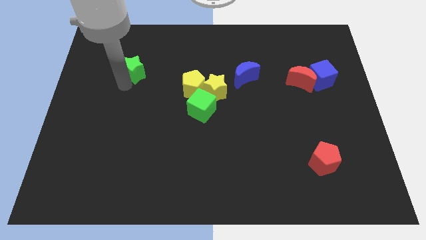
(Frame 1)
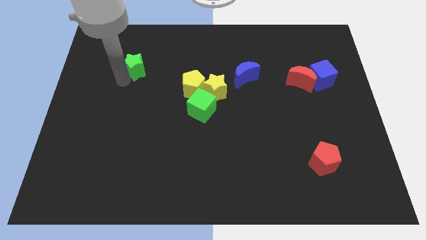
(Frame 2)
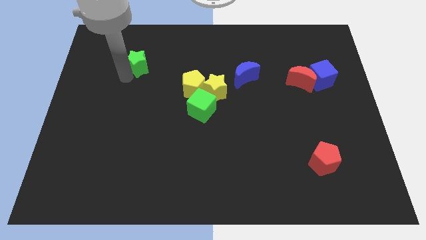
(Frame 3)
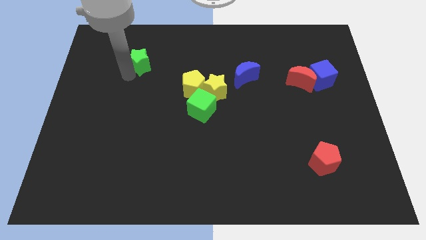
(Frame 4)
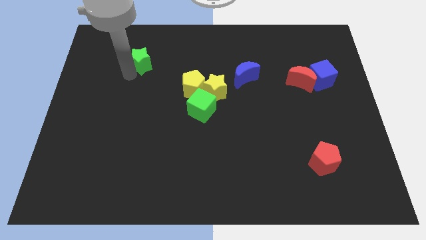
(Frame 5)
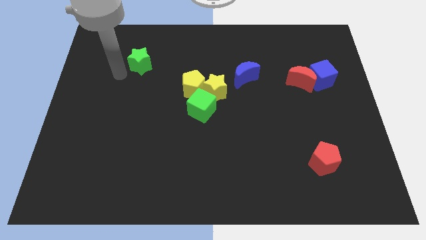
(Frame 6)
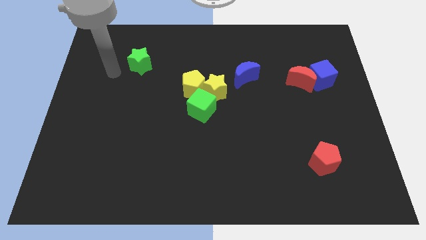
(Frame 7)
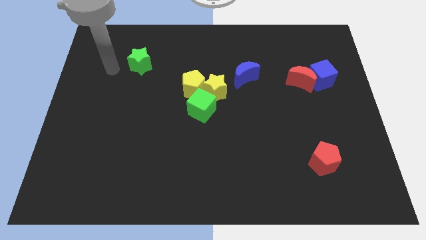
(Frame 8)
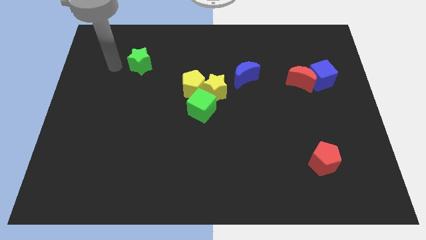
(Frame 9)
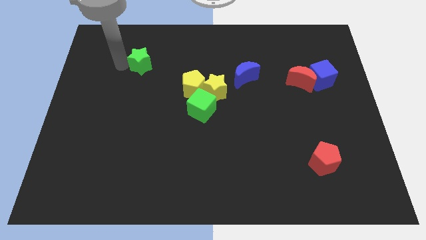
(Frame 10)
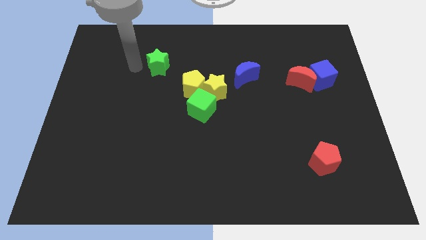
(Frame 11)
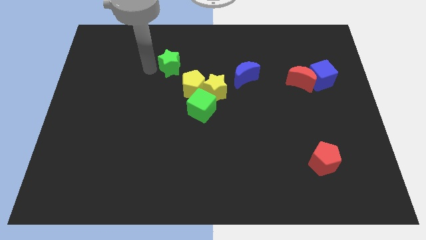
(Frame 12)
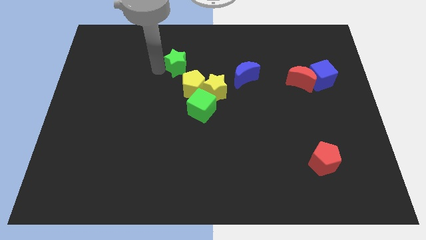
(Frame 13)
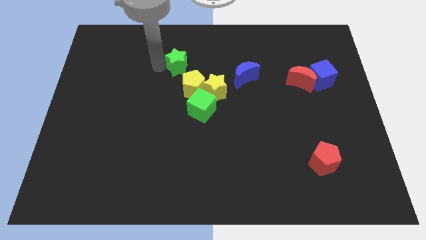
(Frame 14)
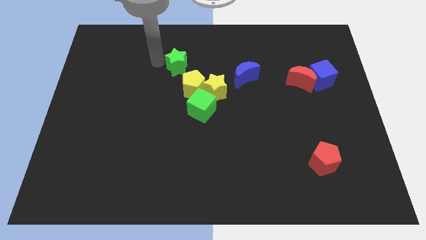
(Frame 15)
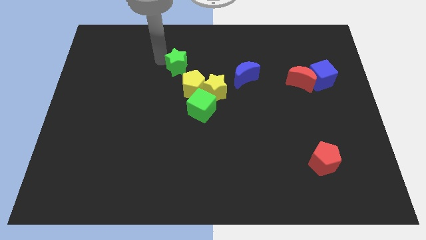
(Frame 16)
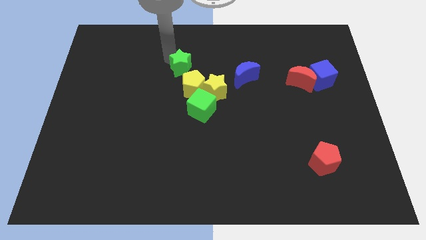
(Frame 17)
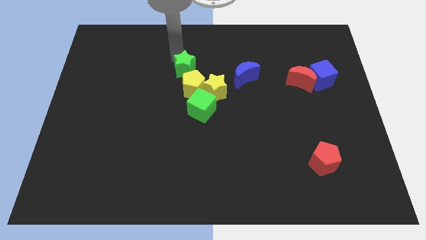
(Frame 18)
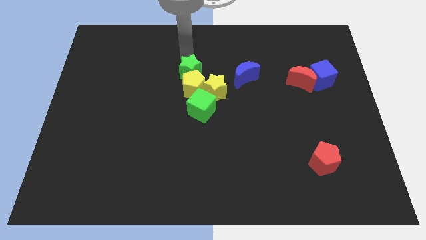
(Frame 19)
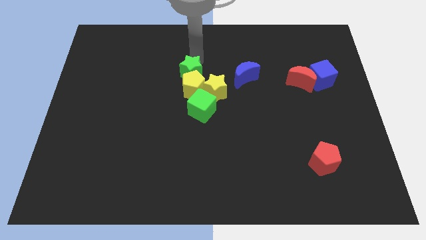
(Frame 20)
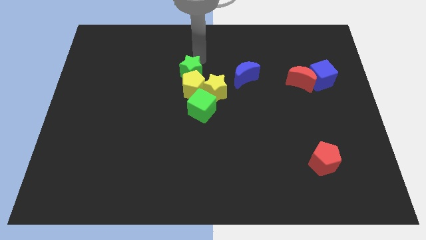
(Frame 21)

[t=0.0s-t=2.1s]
push the green star into the top side of the yellow pentagon

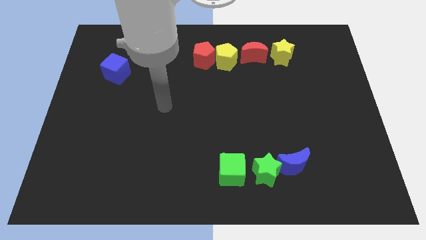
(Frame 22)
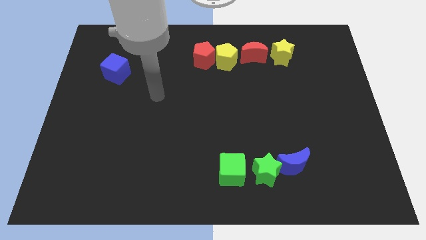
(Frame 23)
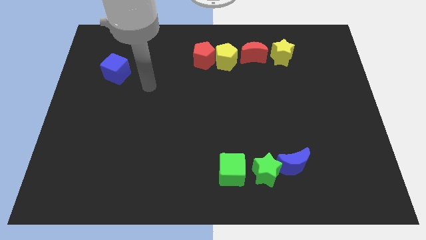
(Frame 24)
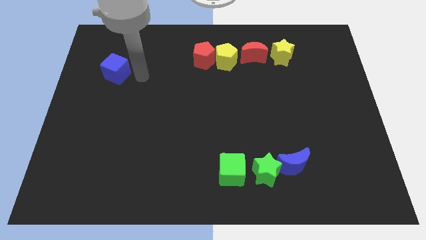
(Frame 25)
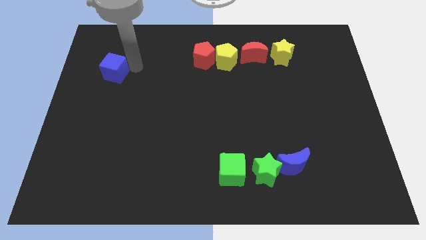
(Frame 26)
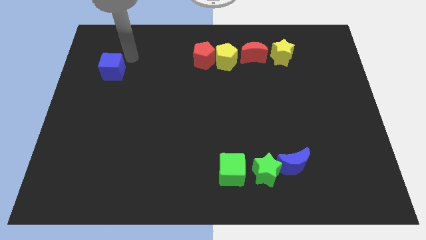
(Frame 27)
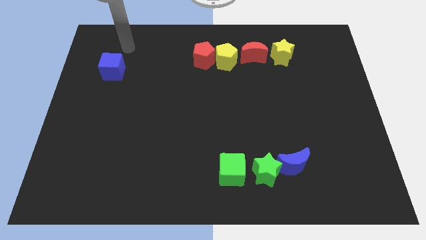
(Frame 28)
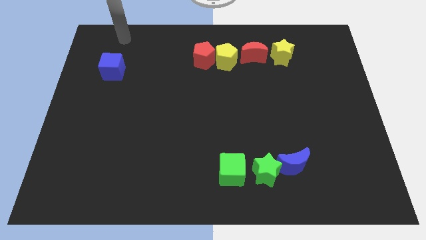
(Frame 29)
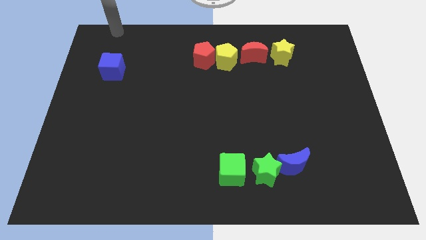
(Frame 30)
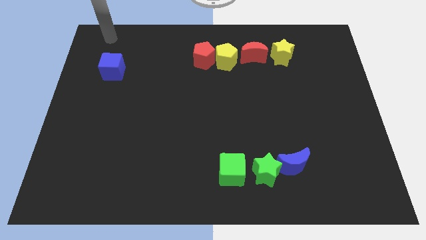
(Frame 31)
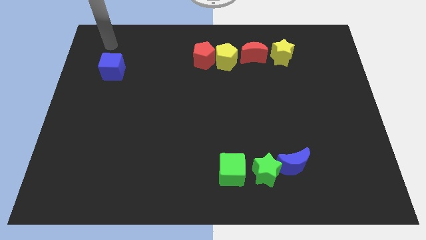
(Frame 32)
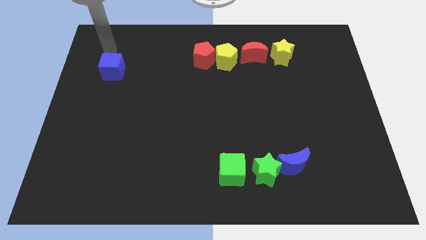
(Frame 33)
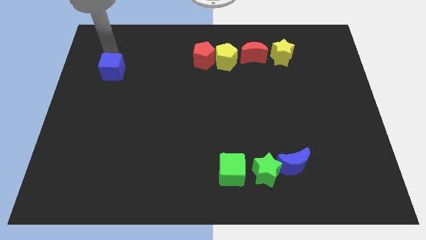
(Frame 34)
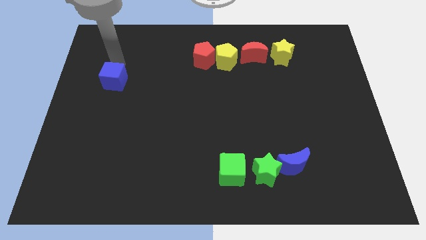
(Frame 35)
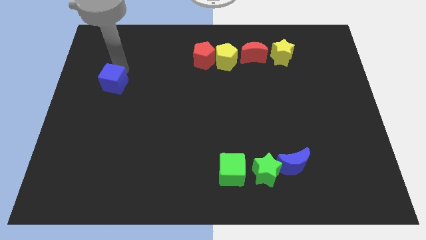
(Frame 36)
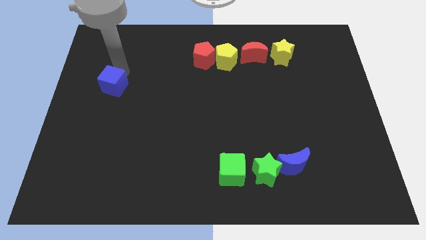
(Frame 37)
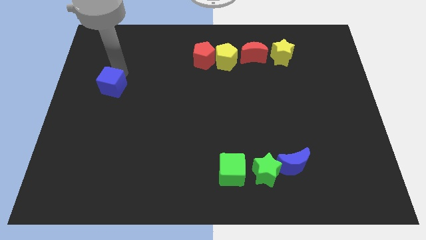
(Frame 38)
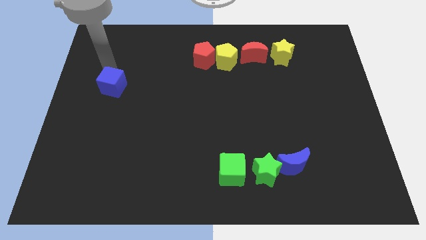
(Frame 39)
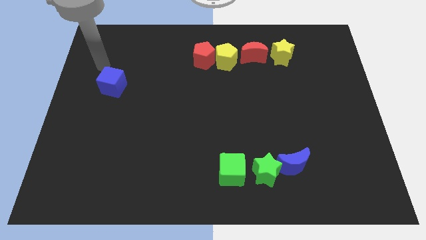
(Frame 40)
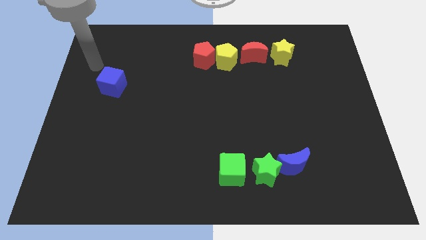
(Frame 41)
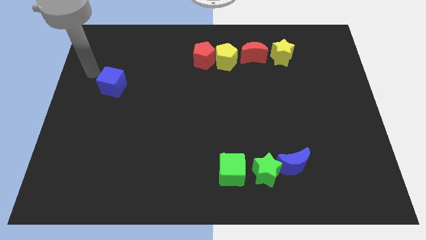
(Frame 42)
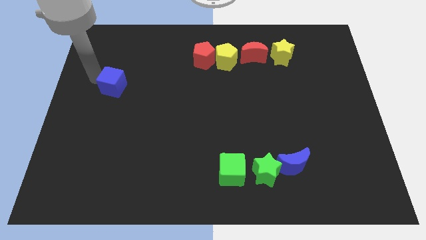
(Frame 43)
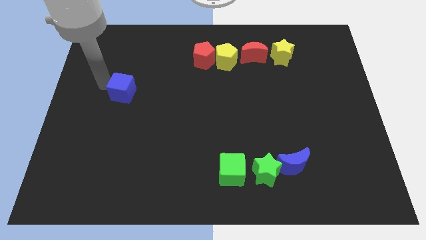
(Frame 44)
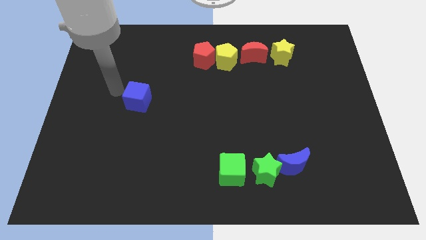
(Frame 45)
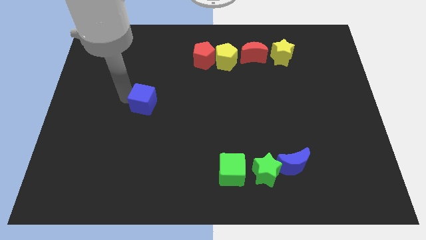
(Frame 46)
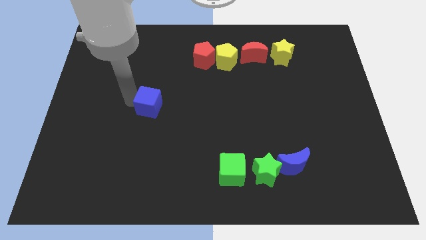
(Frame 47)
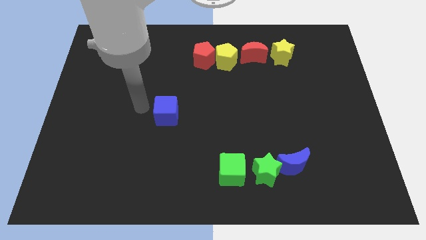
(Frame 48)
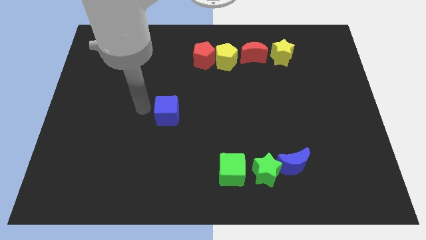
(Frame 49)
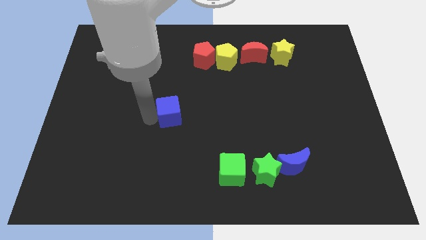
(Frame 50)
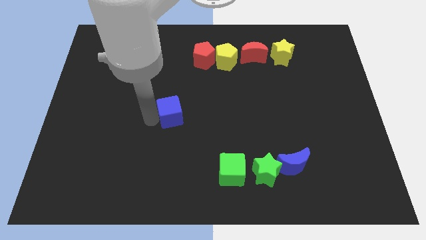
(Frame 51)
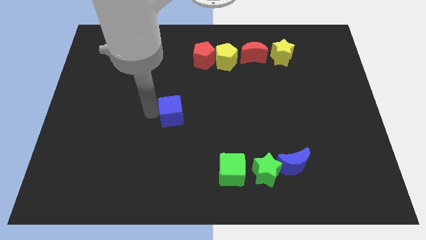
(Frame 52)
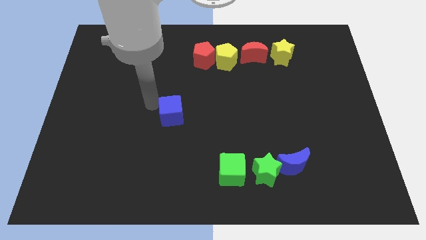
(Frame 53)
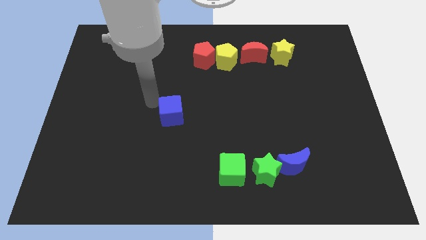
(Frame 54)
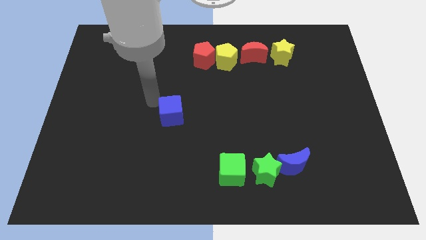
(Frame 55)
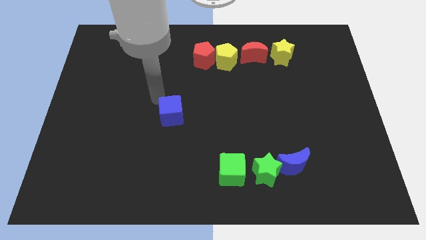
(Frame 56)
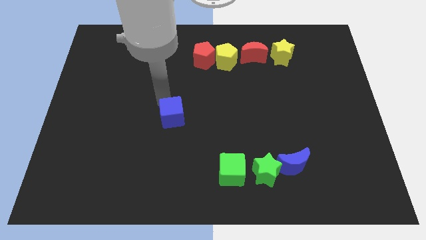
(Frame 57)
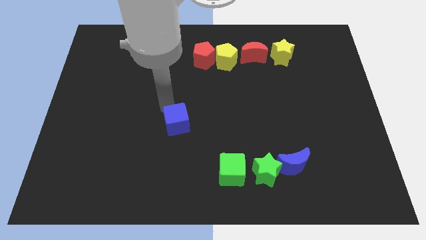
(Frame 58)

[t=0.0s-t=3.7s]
move the blue cube toward the bottom center

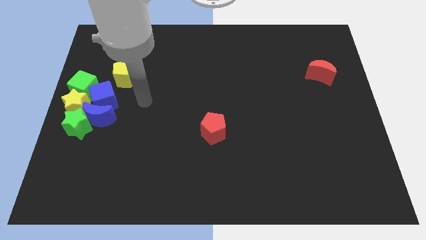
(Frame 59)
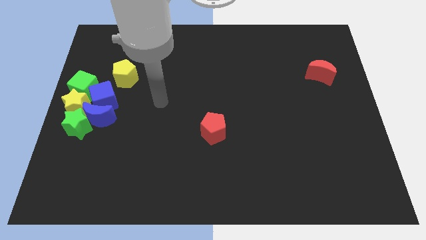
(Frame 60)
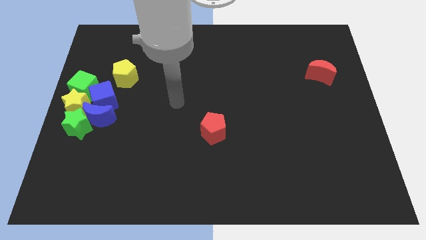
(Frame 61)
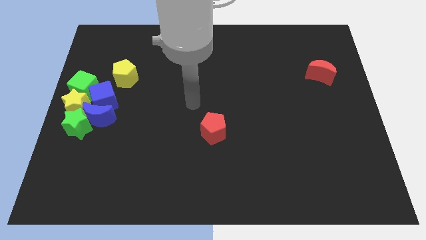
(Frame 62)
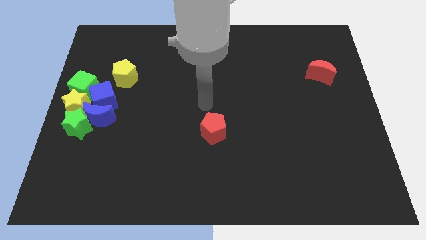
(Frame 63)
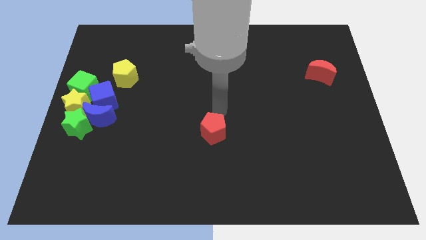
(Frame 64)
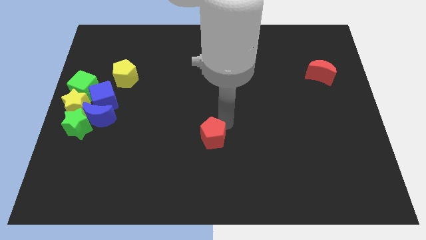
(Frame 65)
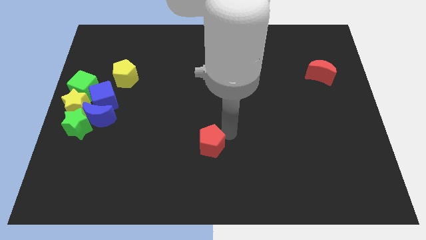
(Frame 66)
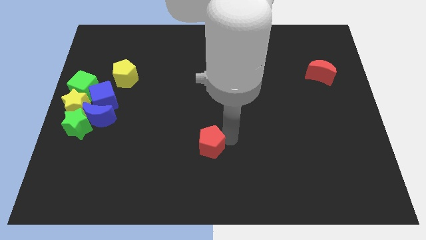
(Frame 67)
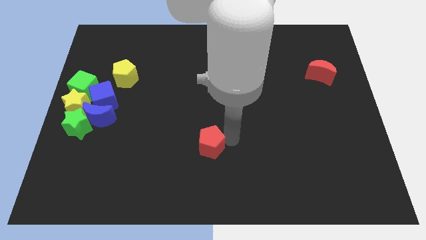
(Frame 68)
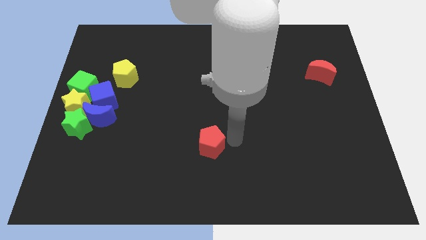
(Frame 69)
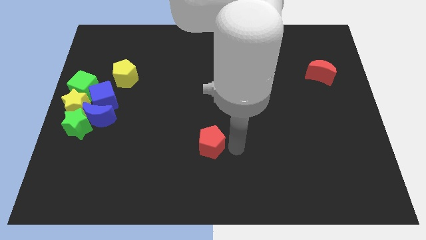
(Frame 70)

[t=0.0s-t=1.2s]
slightly move the red pentagon down

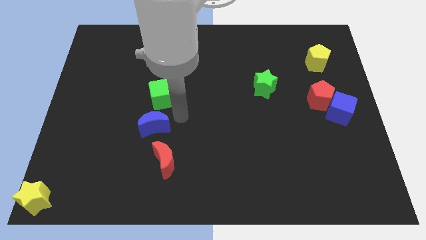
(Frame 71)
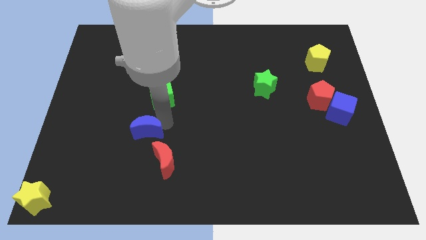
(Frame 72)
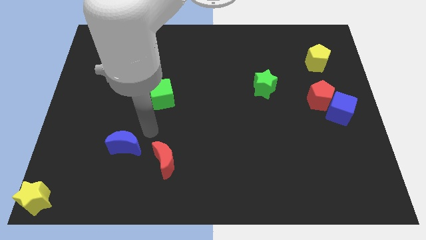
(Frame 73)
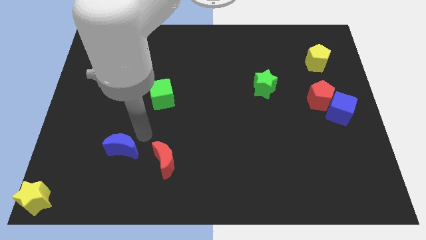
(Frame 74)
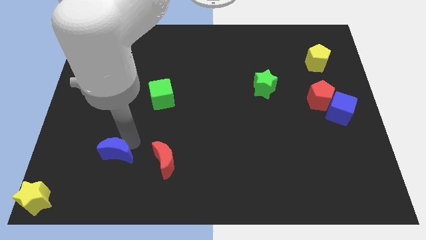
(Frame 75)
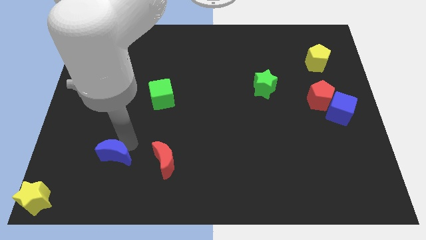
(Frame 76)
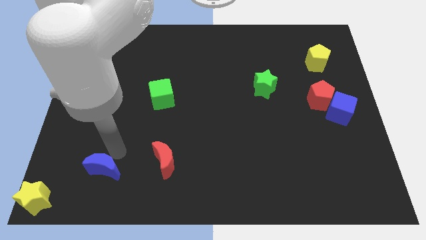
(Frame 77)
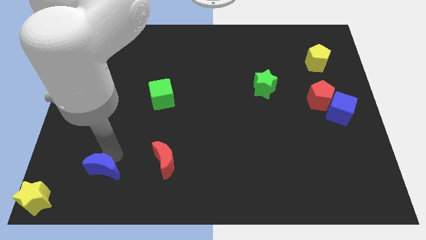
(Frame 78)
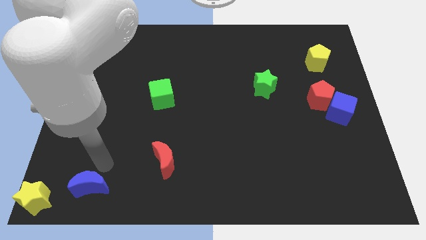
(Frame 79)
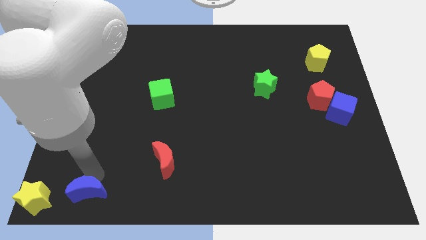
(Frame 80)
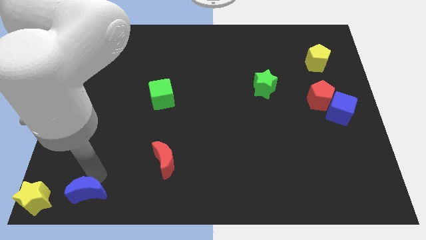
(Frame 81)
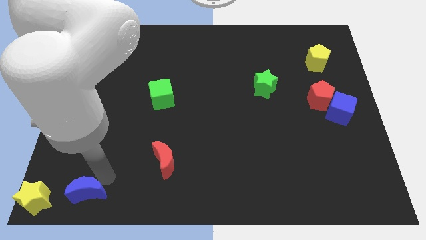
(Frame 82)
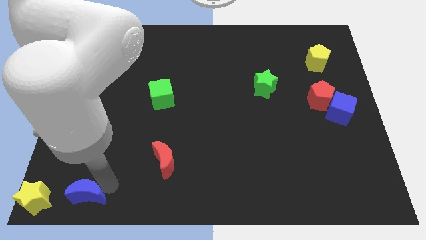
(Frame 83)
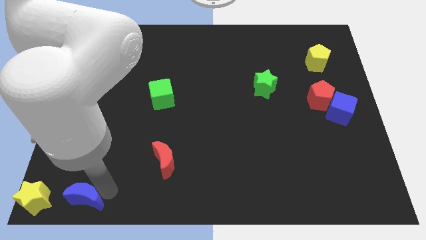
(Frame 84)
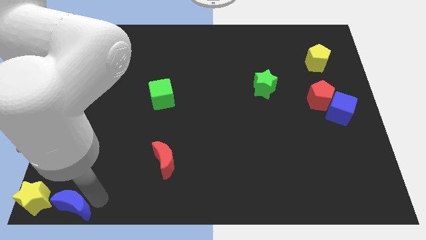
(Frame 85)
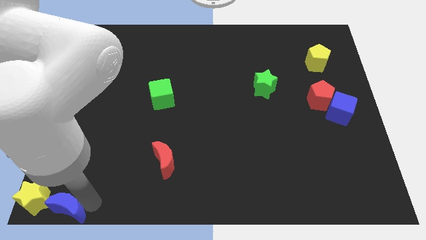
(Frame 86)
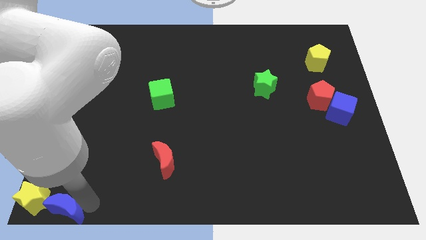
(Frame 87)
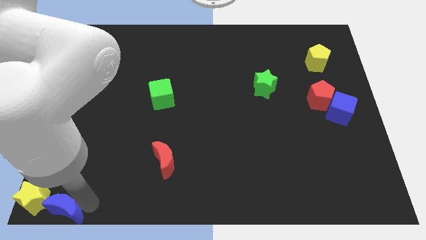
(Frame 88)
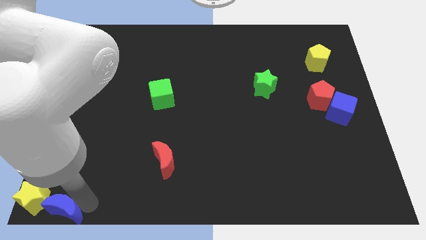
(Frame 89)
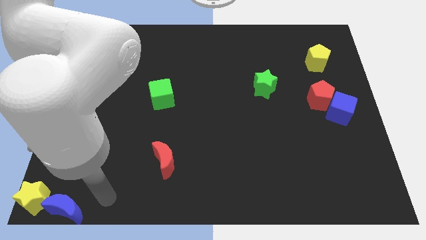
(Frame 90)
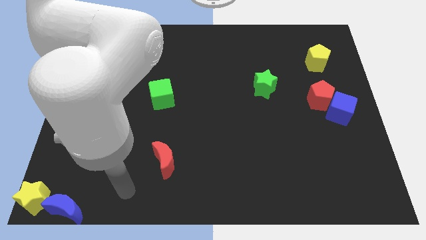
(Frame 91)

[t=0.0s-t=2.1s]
move the blue crescent right to the yellow star
